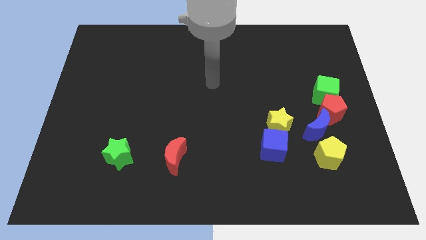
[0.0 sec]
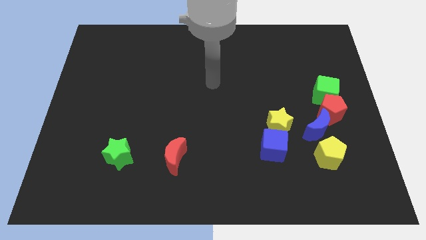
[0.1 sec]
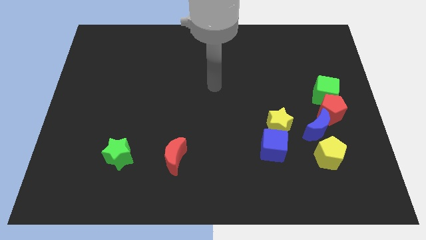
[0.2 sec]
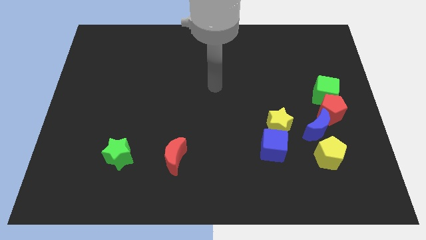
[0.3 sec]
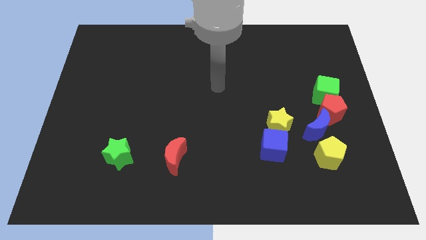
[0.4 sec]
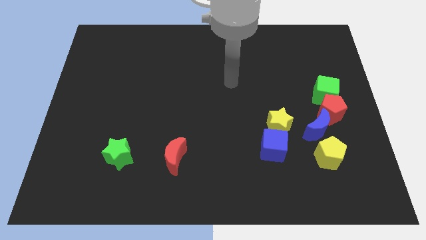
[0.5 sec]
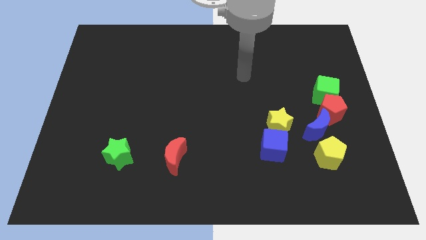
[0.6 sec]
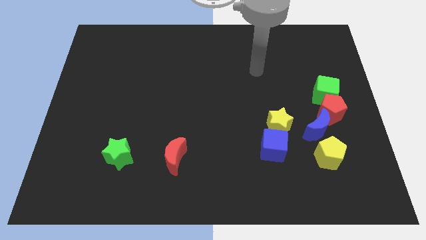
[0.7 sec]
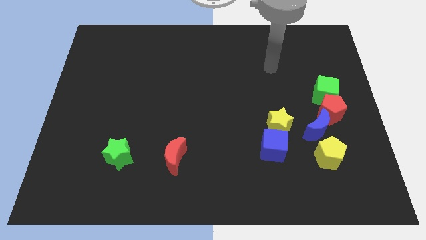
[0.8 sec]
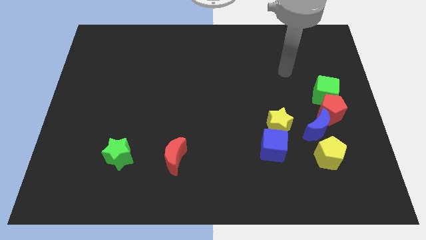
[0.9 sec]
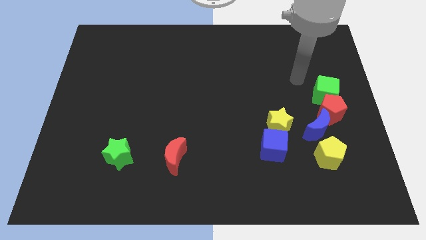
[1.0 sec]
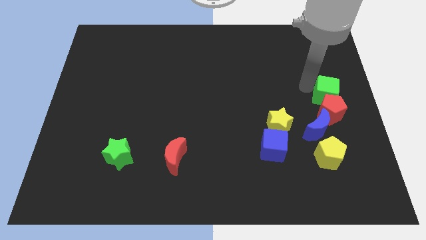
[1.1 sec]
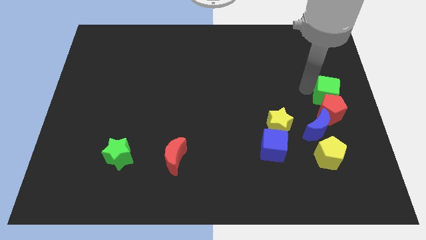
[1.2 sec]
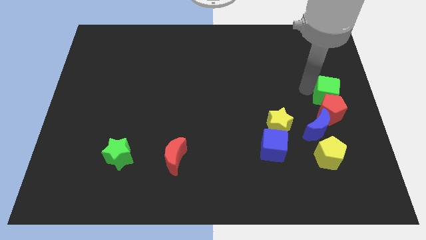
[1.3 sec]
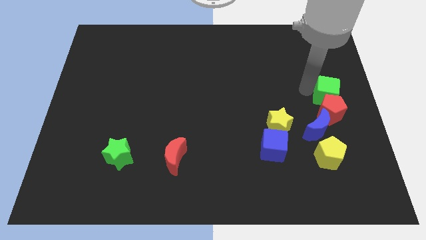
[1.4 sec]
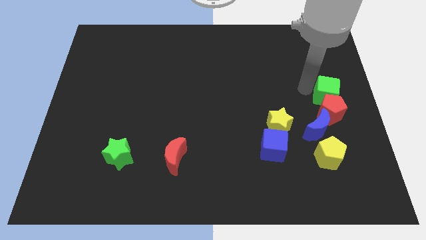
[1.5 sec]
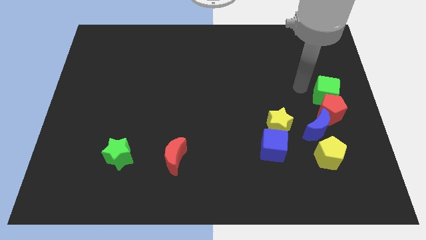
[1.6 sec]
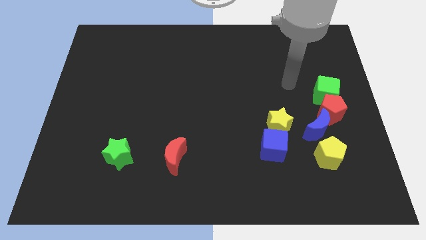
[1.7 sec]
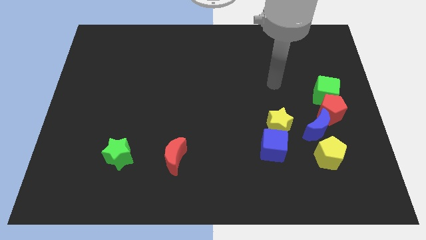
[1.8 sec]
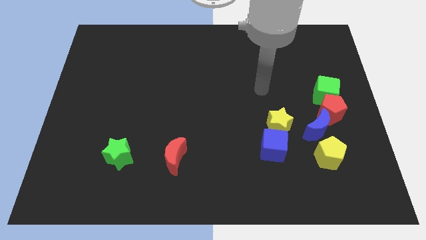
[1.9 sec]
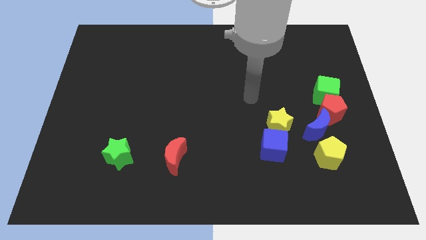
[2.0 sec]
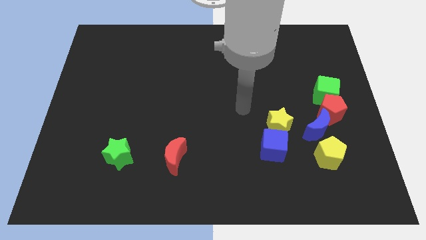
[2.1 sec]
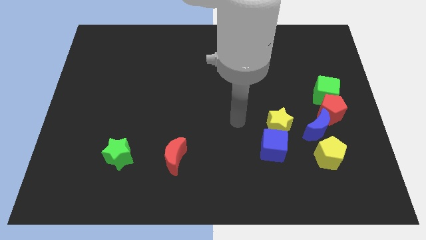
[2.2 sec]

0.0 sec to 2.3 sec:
point your arm at the left side of the yellow star

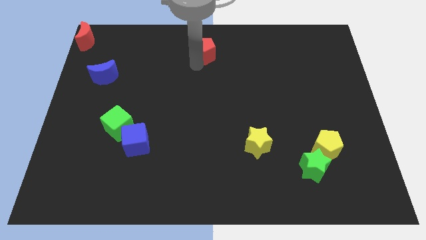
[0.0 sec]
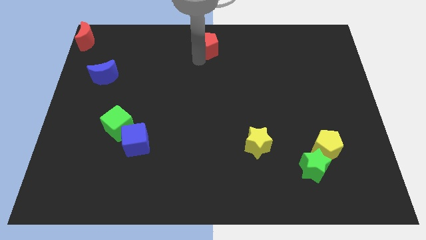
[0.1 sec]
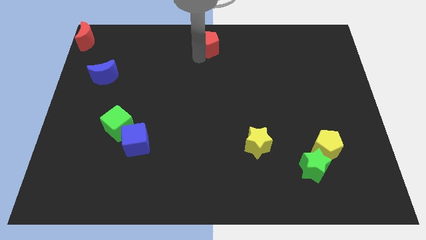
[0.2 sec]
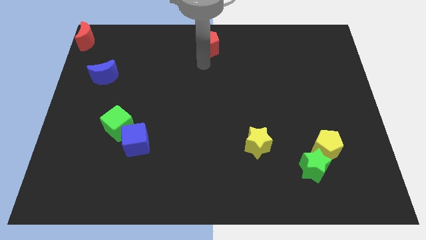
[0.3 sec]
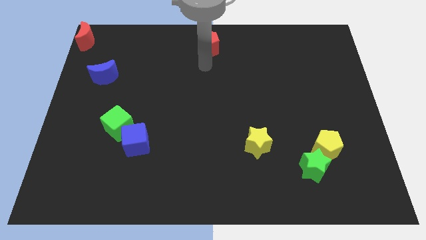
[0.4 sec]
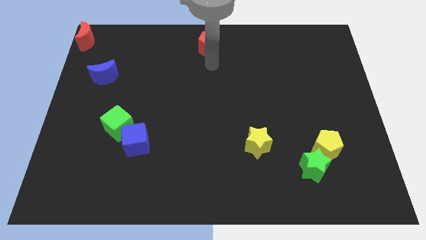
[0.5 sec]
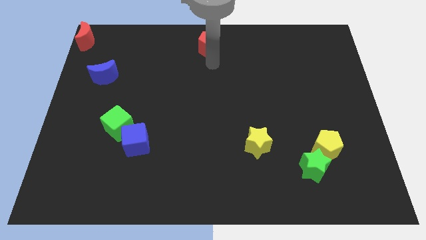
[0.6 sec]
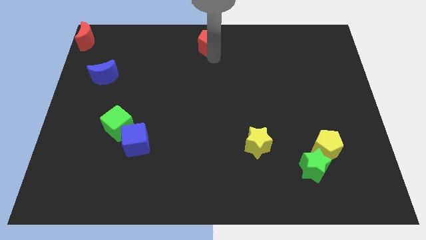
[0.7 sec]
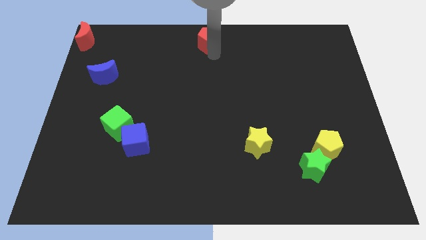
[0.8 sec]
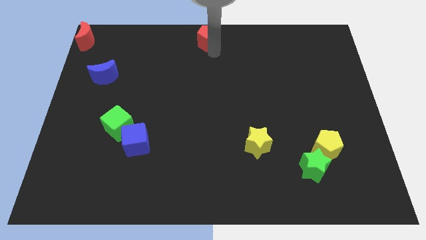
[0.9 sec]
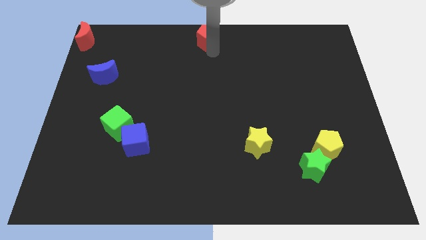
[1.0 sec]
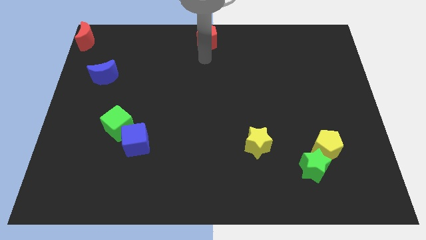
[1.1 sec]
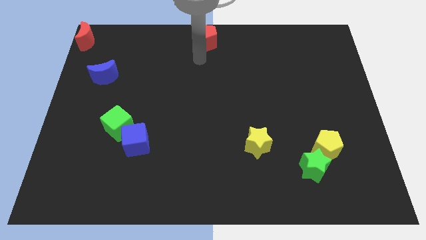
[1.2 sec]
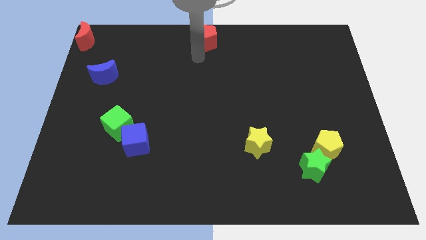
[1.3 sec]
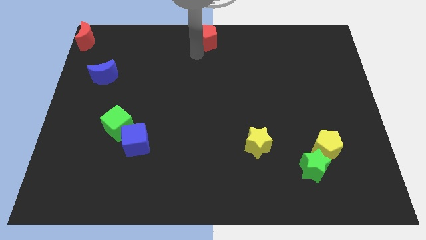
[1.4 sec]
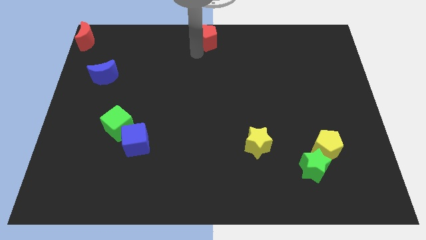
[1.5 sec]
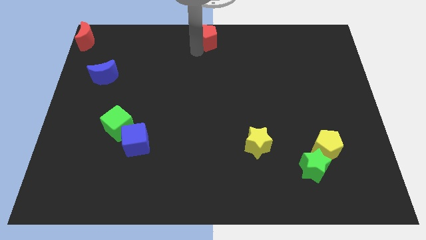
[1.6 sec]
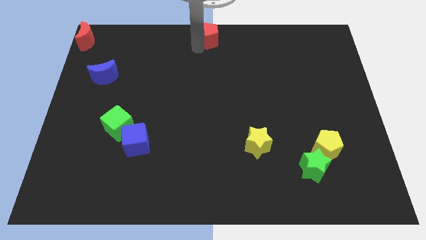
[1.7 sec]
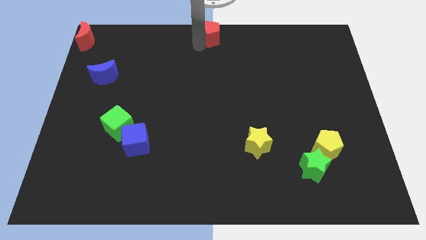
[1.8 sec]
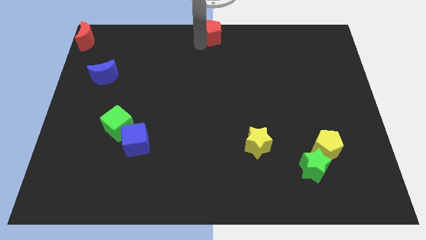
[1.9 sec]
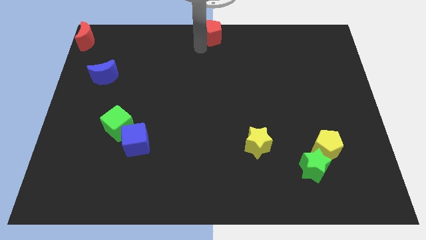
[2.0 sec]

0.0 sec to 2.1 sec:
move red pentagon to the top center

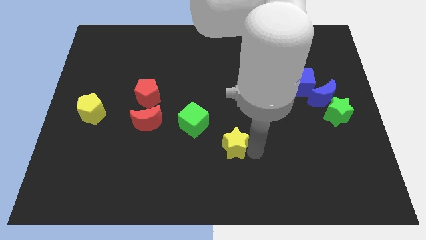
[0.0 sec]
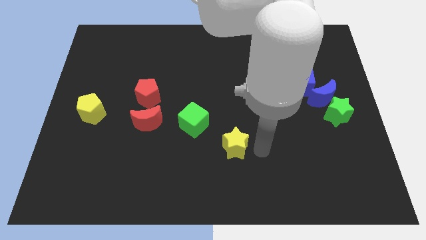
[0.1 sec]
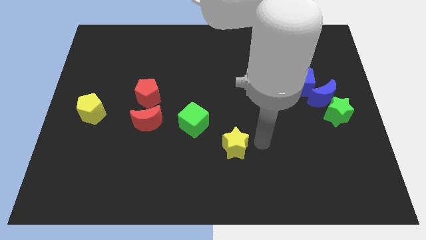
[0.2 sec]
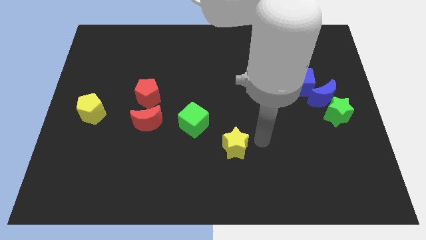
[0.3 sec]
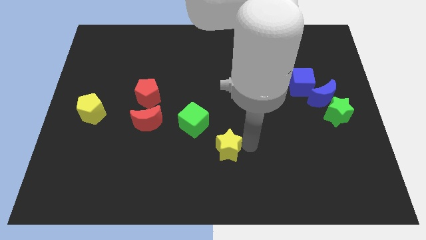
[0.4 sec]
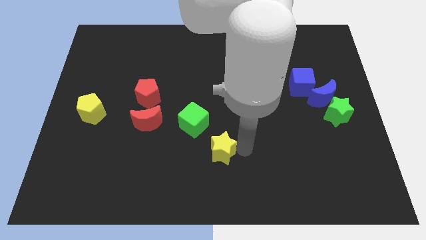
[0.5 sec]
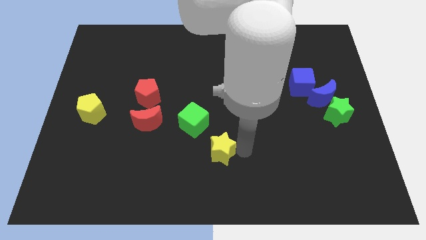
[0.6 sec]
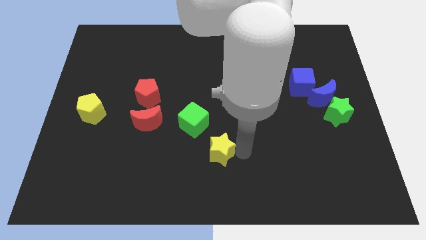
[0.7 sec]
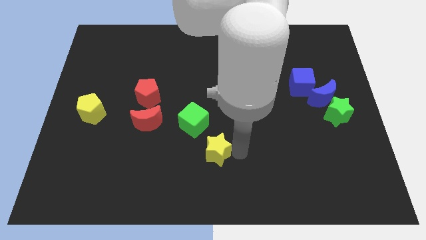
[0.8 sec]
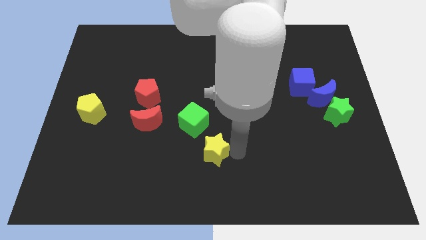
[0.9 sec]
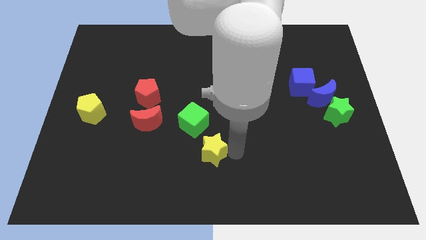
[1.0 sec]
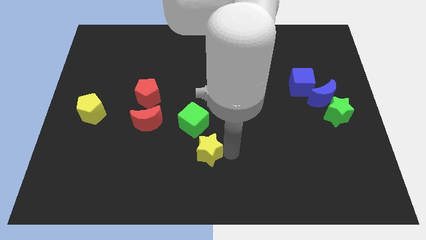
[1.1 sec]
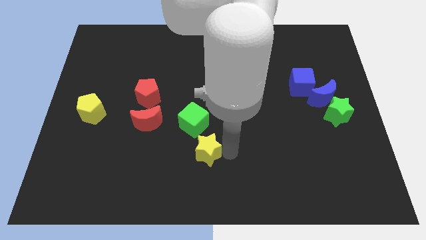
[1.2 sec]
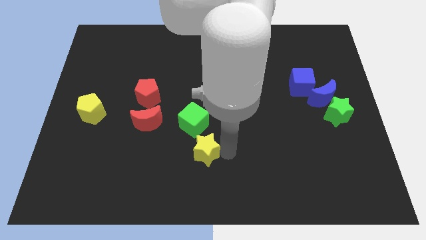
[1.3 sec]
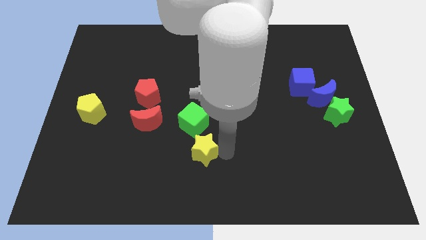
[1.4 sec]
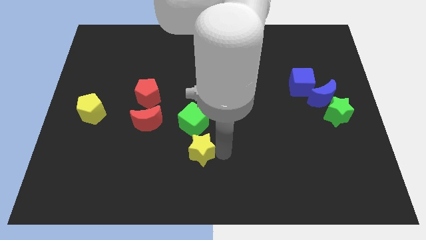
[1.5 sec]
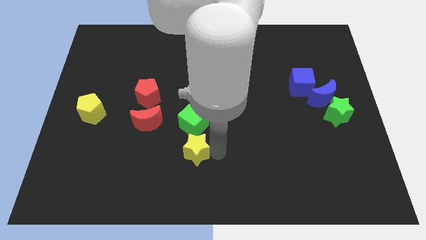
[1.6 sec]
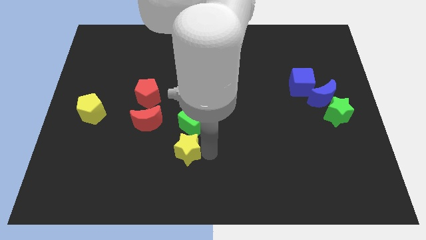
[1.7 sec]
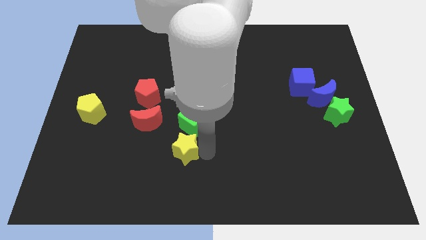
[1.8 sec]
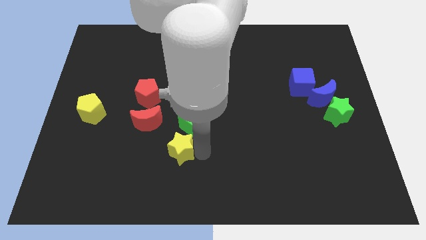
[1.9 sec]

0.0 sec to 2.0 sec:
push the yellow star down to the green cube

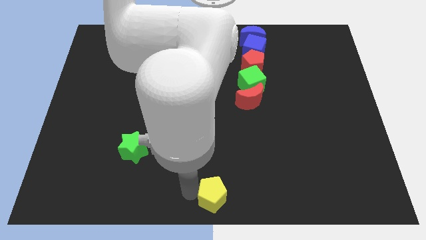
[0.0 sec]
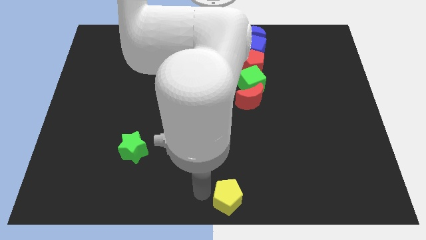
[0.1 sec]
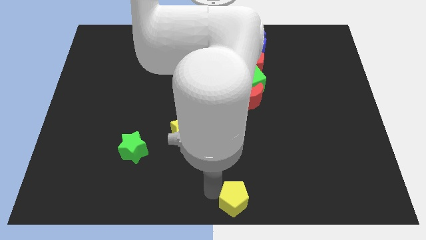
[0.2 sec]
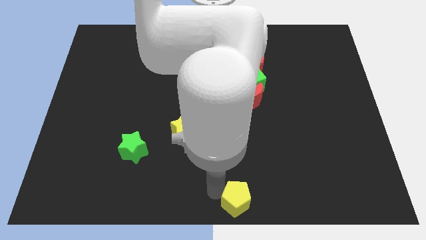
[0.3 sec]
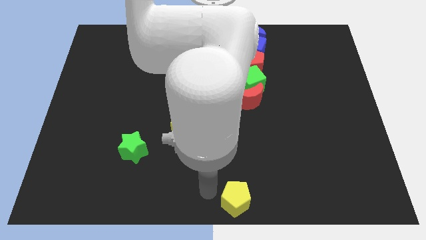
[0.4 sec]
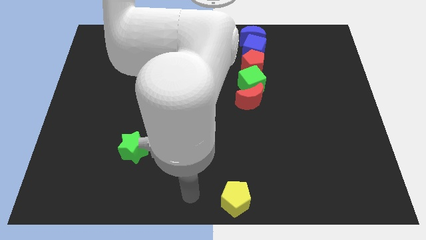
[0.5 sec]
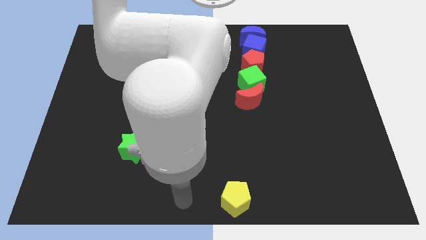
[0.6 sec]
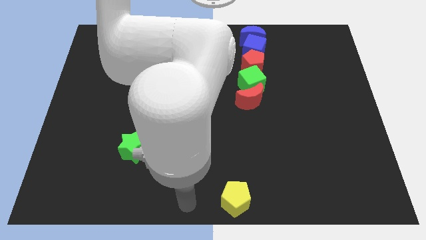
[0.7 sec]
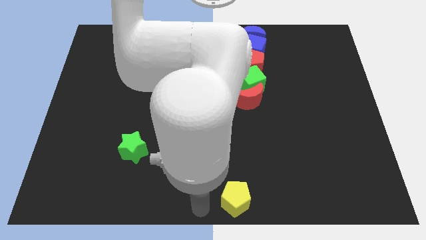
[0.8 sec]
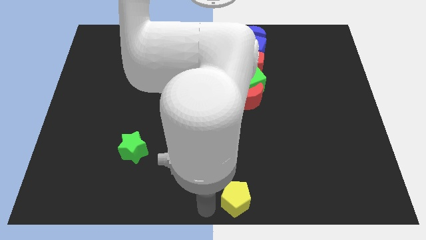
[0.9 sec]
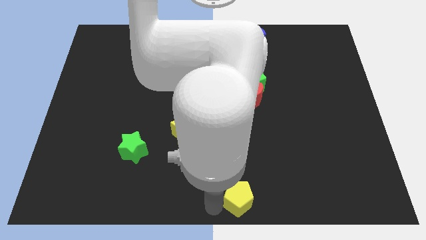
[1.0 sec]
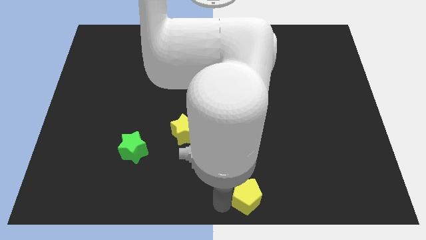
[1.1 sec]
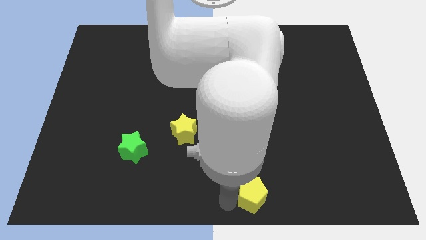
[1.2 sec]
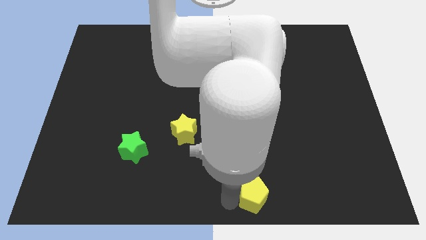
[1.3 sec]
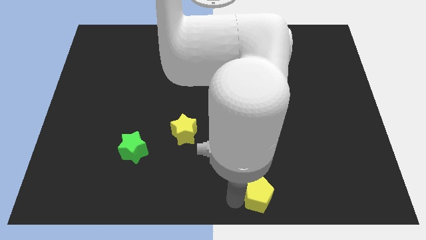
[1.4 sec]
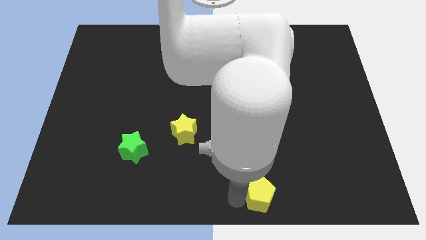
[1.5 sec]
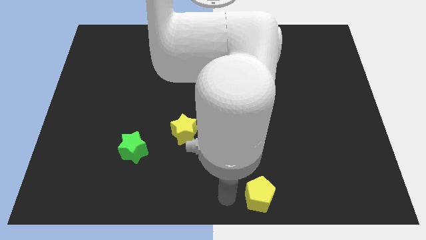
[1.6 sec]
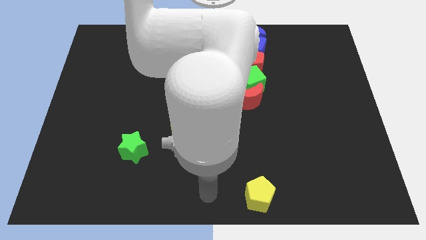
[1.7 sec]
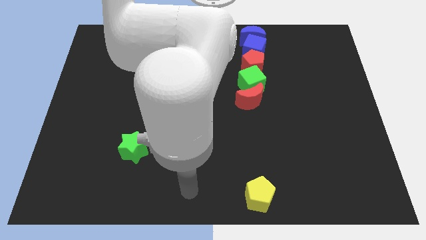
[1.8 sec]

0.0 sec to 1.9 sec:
move the yellow pentagon slightly right side from the bottom center of the board

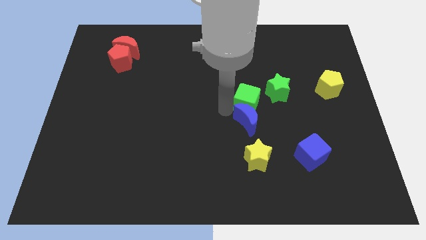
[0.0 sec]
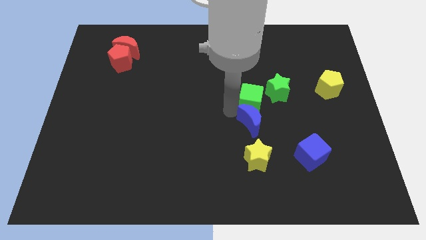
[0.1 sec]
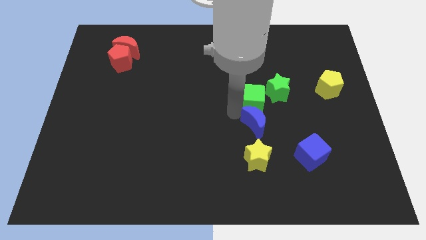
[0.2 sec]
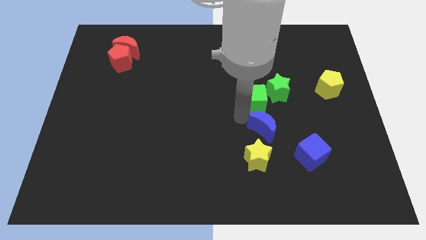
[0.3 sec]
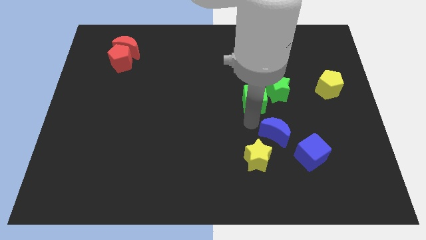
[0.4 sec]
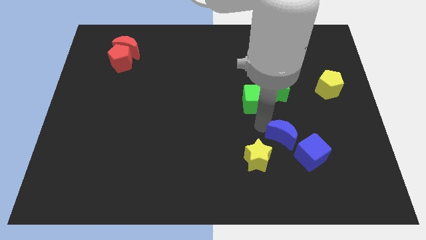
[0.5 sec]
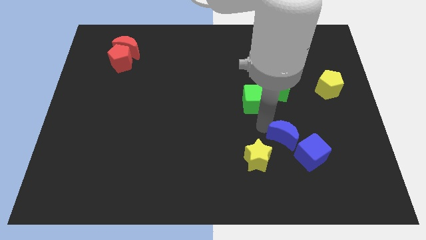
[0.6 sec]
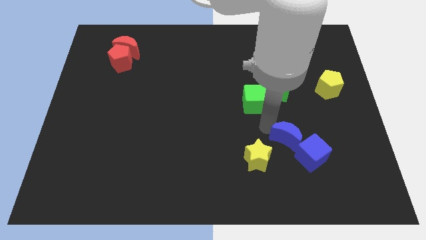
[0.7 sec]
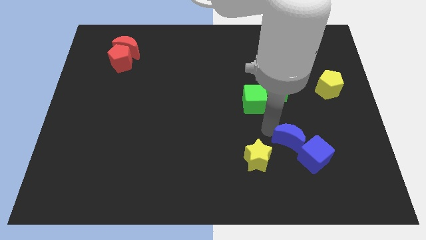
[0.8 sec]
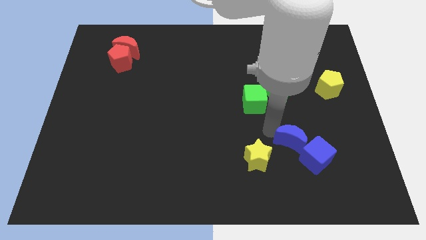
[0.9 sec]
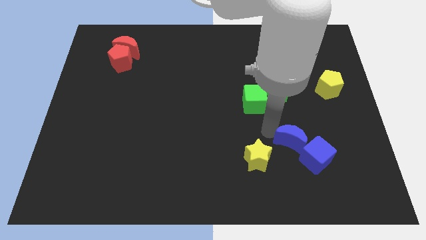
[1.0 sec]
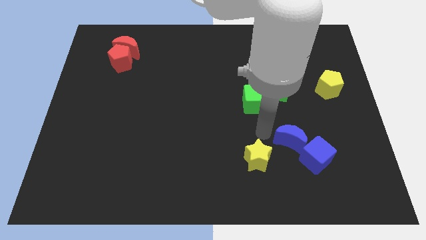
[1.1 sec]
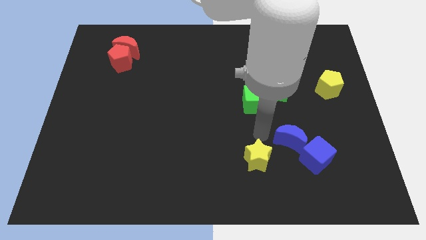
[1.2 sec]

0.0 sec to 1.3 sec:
push the blue crescent away from the green cube
